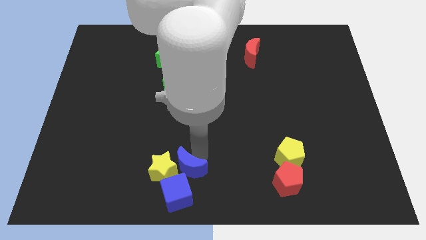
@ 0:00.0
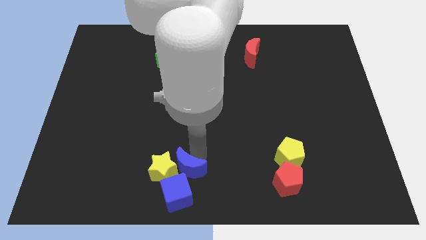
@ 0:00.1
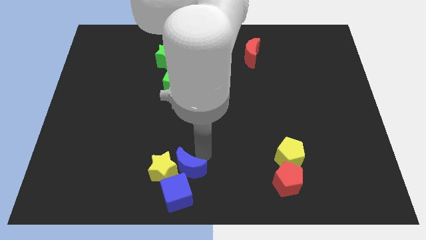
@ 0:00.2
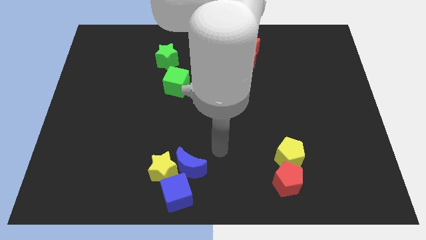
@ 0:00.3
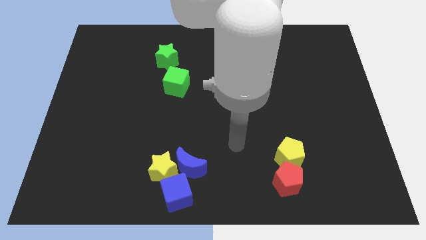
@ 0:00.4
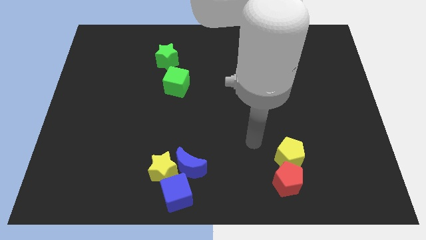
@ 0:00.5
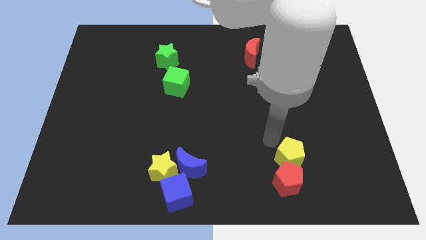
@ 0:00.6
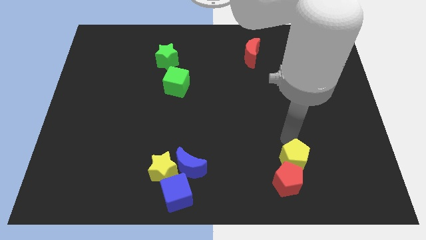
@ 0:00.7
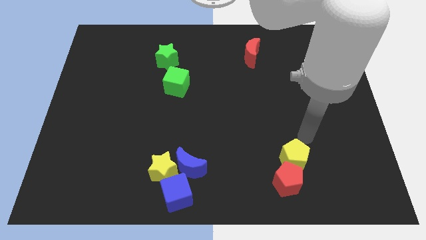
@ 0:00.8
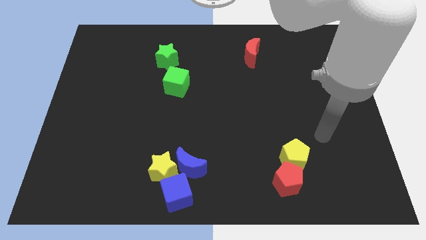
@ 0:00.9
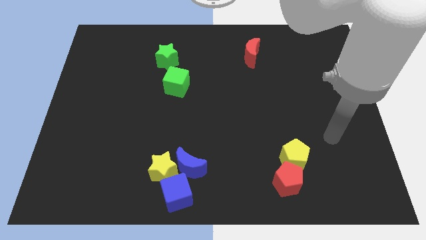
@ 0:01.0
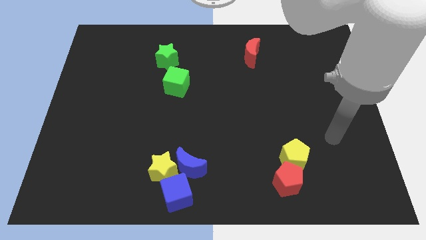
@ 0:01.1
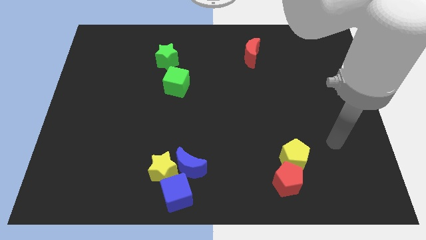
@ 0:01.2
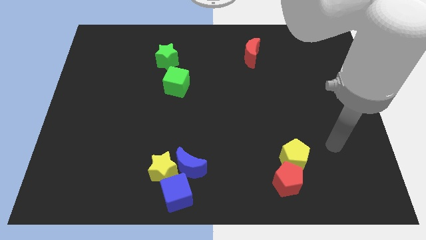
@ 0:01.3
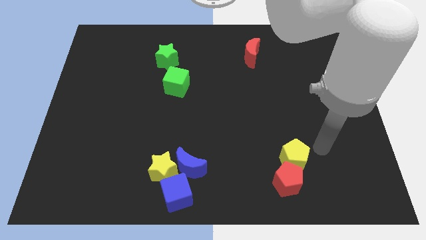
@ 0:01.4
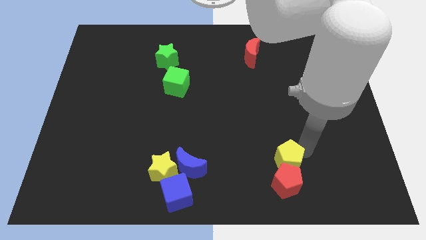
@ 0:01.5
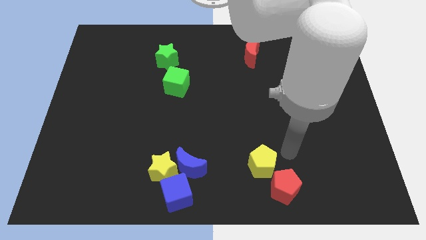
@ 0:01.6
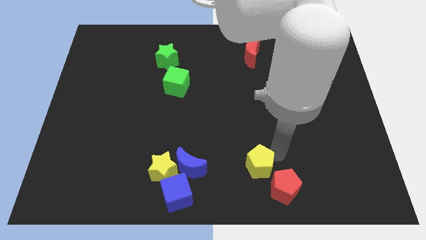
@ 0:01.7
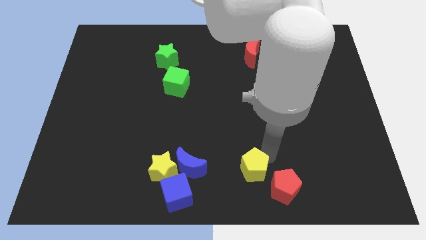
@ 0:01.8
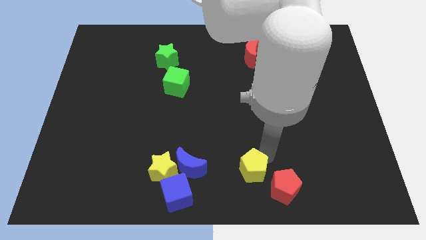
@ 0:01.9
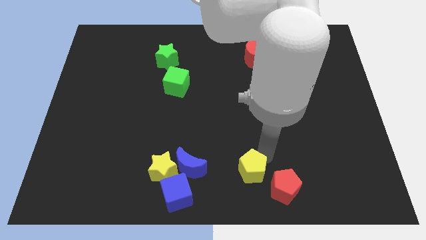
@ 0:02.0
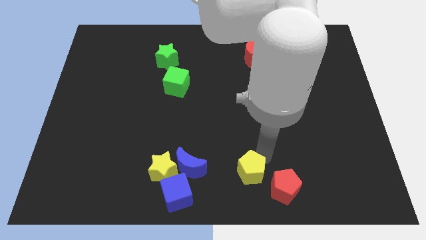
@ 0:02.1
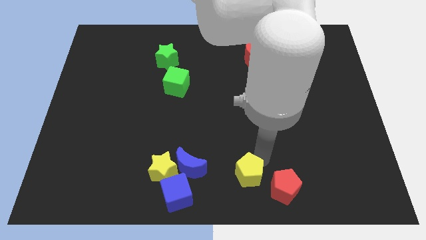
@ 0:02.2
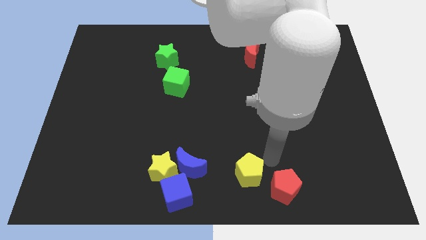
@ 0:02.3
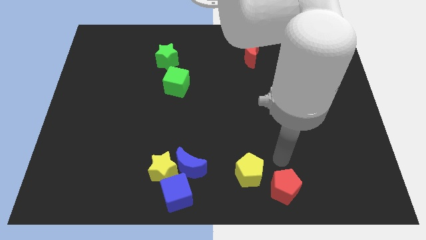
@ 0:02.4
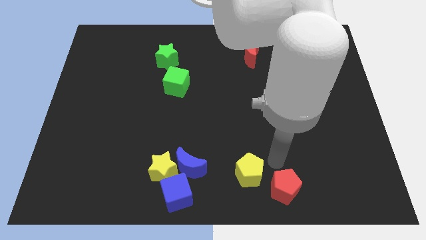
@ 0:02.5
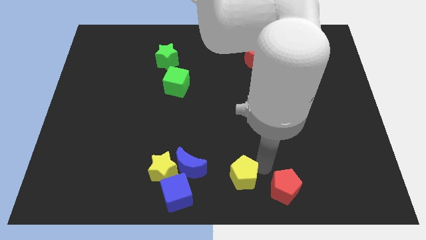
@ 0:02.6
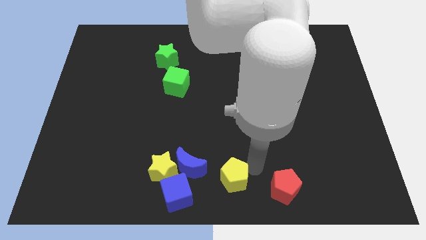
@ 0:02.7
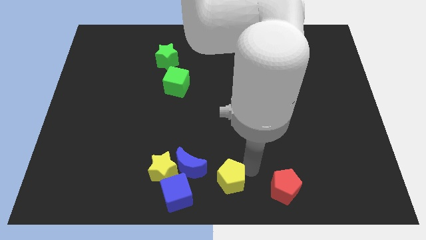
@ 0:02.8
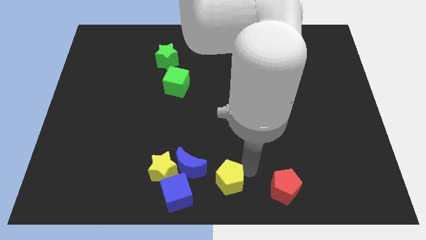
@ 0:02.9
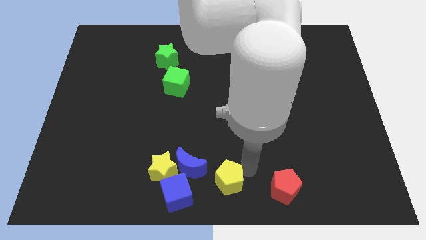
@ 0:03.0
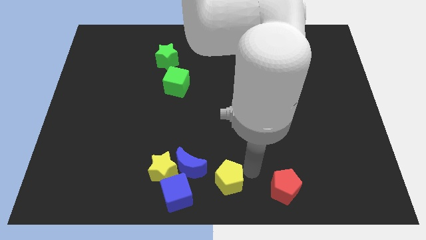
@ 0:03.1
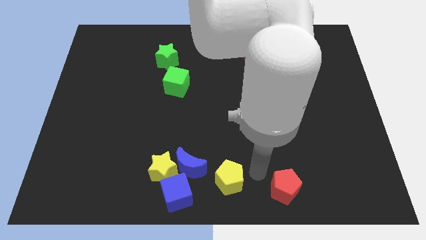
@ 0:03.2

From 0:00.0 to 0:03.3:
separate the yellow pentagon and the red pentagon

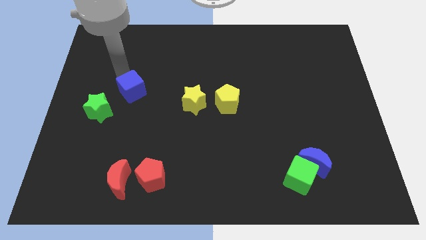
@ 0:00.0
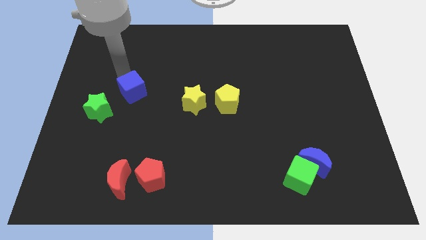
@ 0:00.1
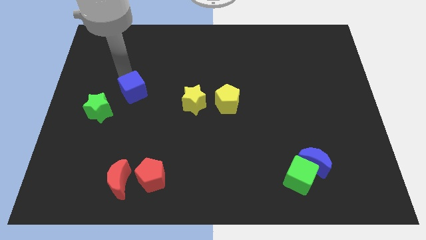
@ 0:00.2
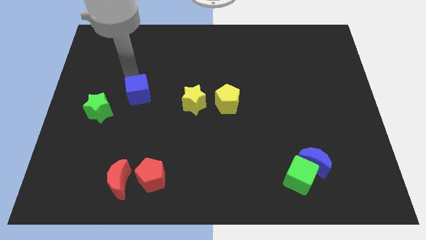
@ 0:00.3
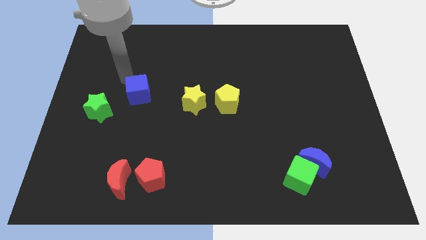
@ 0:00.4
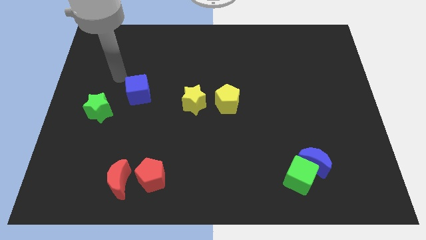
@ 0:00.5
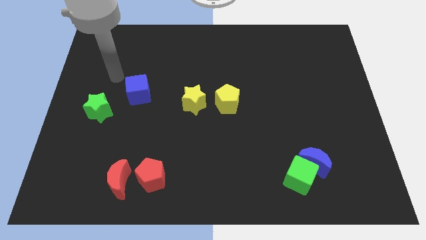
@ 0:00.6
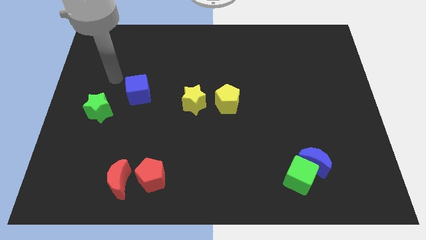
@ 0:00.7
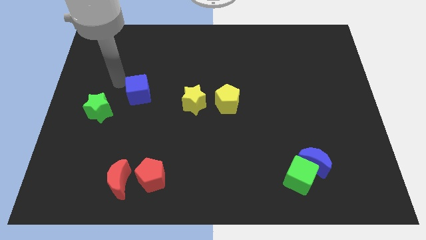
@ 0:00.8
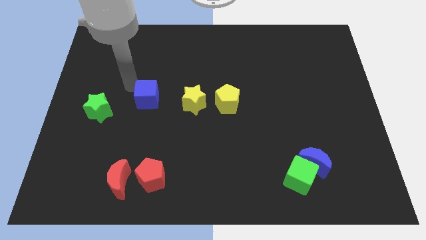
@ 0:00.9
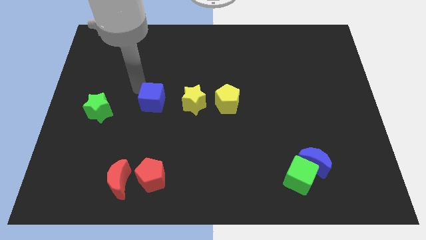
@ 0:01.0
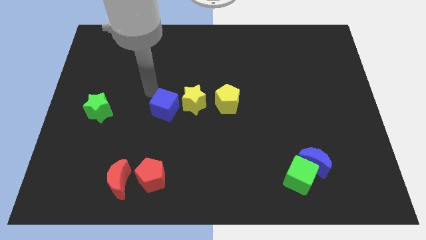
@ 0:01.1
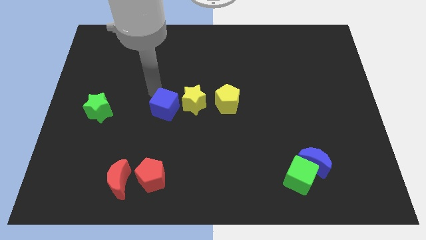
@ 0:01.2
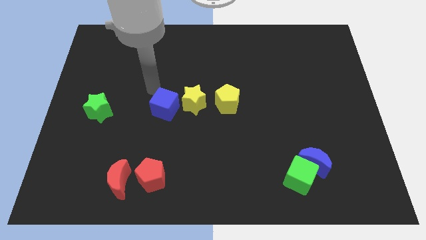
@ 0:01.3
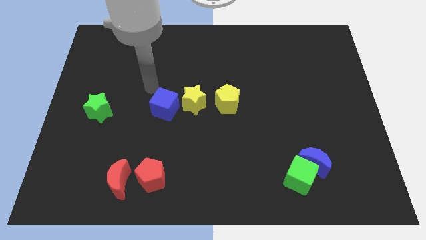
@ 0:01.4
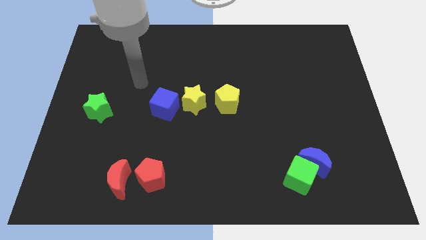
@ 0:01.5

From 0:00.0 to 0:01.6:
push the blue cube to the left of the yellow star

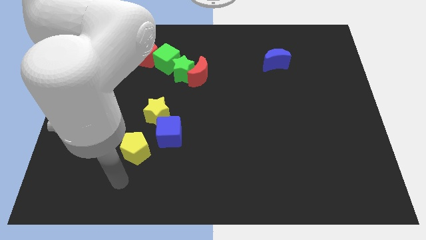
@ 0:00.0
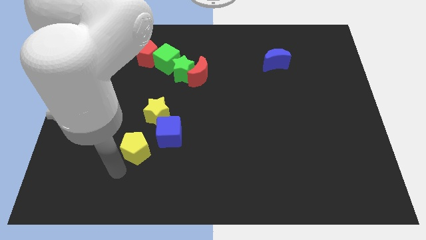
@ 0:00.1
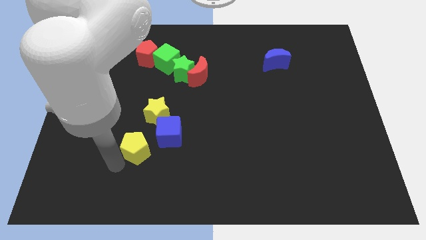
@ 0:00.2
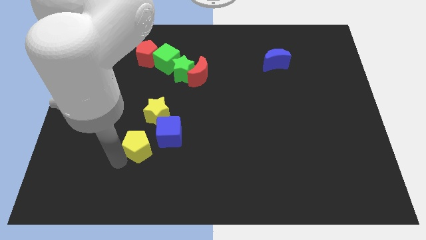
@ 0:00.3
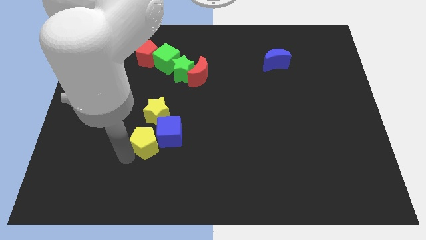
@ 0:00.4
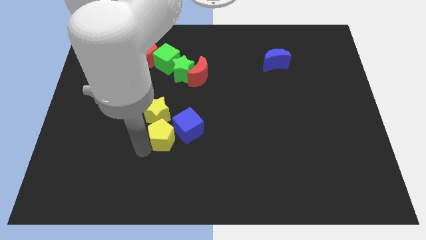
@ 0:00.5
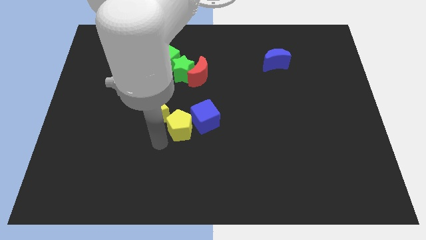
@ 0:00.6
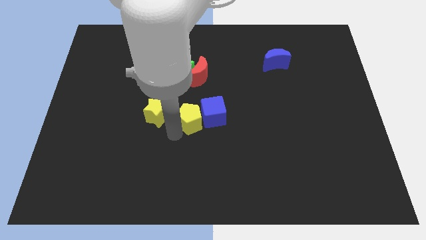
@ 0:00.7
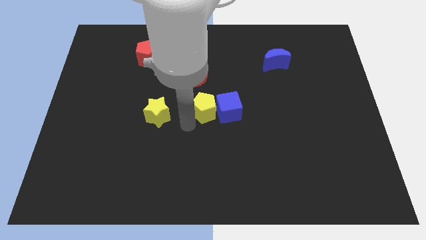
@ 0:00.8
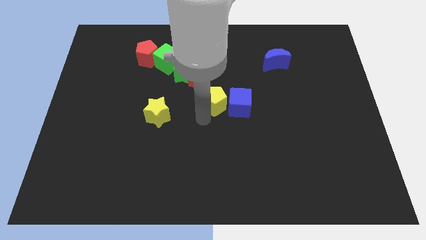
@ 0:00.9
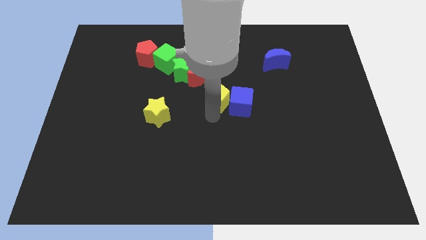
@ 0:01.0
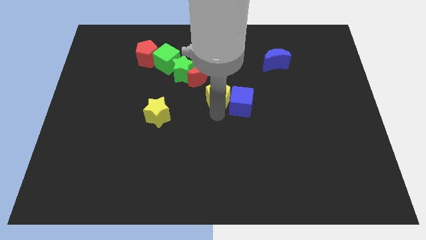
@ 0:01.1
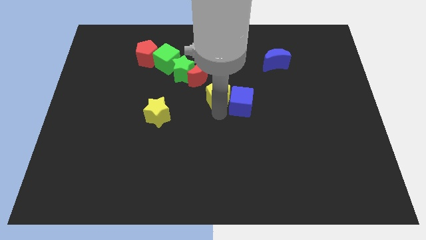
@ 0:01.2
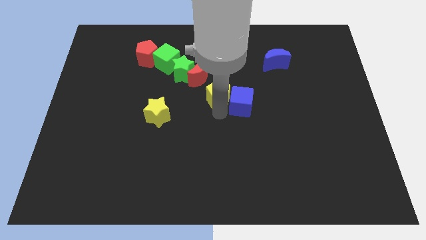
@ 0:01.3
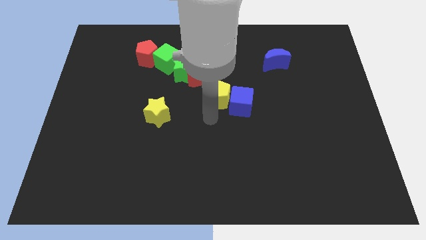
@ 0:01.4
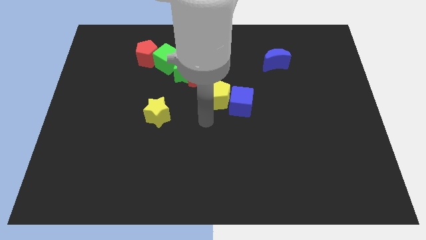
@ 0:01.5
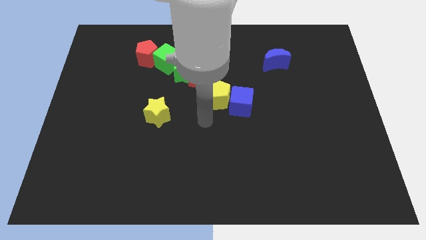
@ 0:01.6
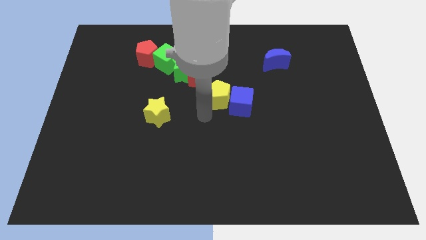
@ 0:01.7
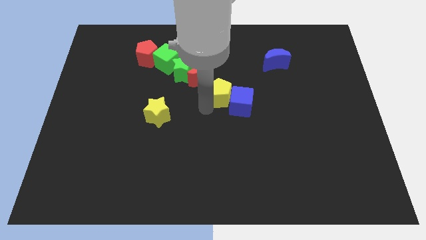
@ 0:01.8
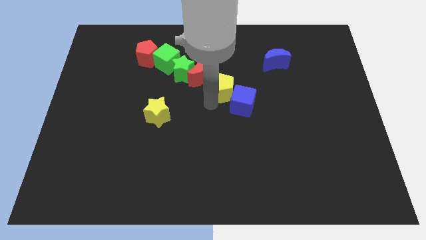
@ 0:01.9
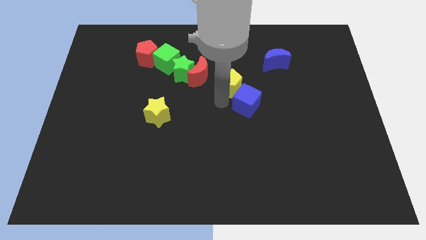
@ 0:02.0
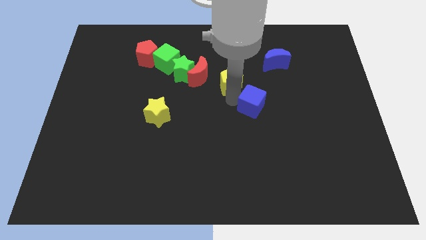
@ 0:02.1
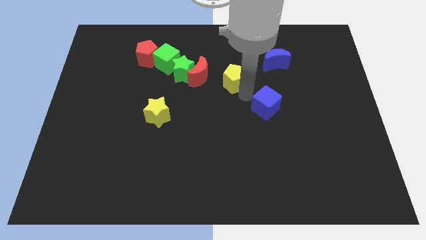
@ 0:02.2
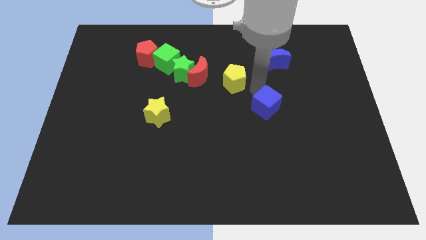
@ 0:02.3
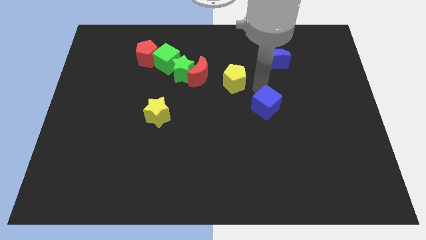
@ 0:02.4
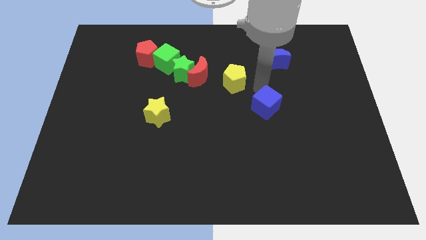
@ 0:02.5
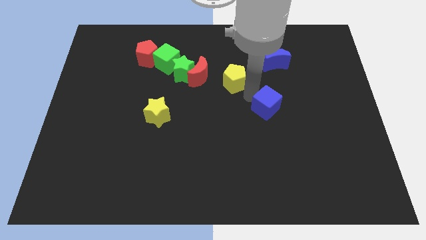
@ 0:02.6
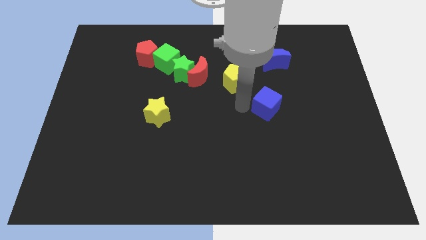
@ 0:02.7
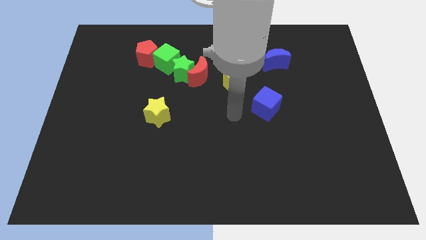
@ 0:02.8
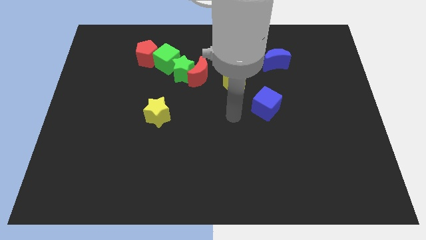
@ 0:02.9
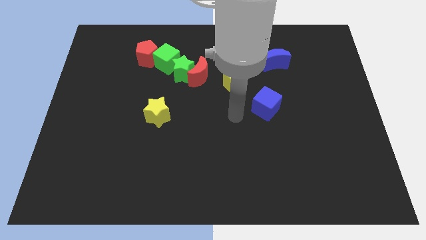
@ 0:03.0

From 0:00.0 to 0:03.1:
move the yellow pentagon to the right side of the red crescent

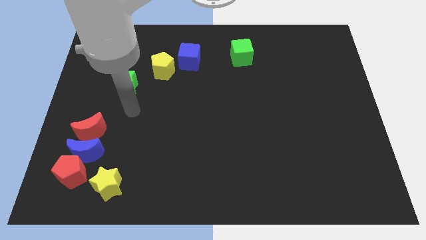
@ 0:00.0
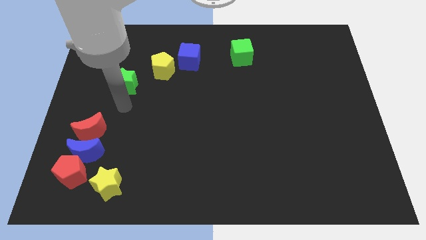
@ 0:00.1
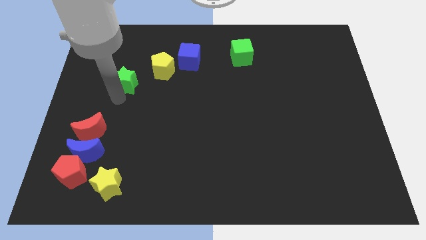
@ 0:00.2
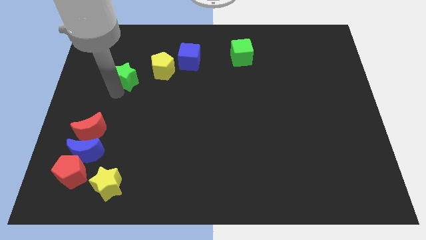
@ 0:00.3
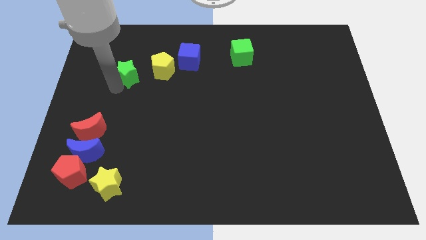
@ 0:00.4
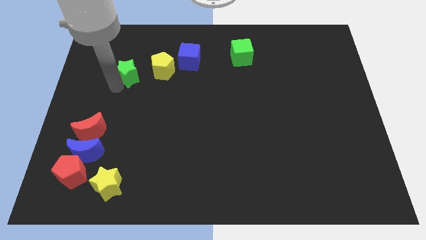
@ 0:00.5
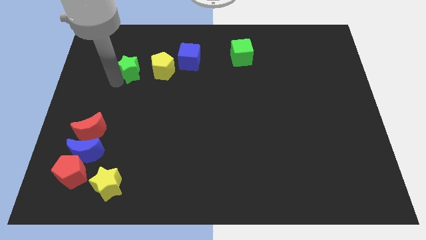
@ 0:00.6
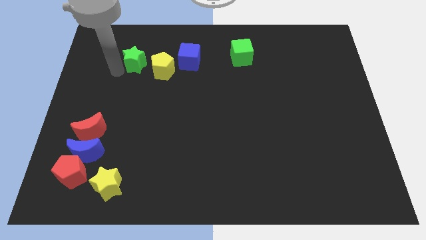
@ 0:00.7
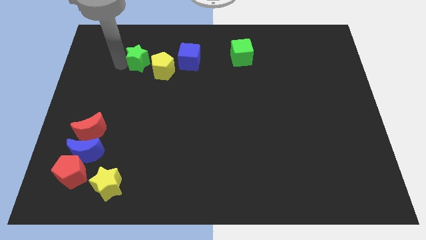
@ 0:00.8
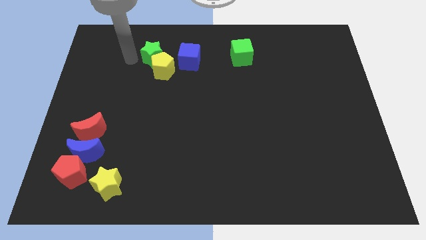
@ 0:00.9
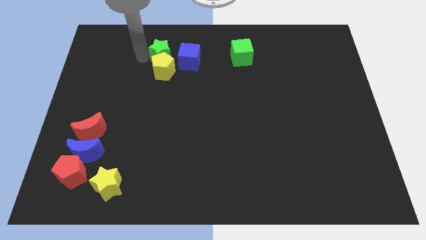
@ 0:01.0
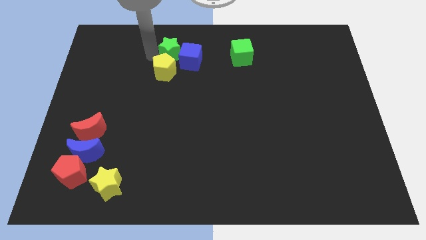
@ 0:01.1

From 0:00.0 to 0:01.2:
place the green star above the yellow pentagon
